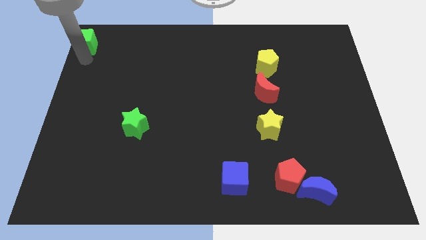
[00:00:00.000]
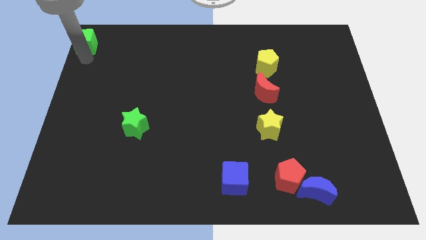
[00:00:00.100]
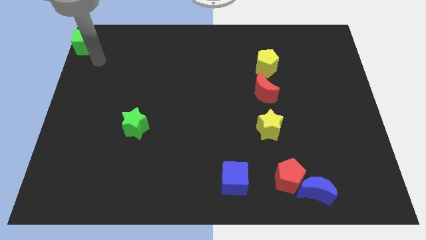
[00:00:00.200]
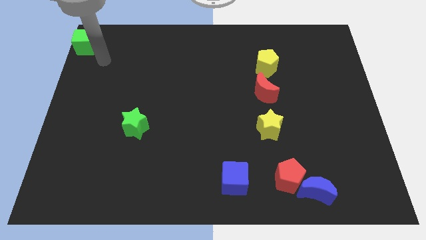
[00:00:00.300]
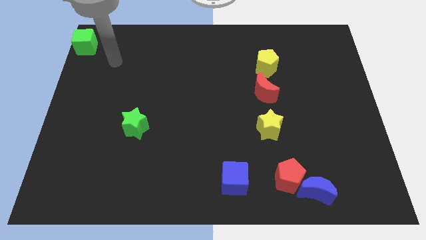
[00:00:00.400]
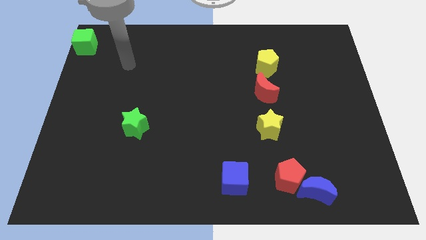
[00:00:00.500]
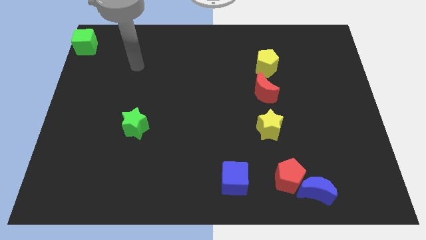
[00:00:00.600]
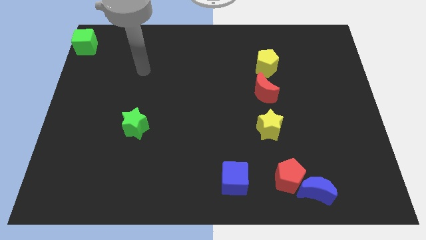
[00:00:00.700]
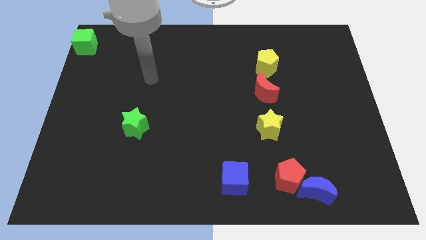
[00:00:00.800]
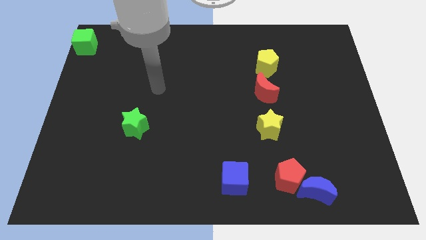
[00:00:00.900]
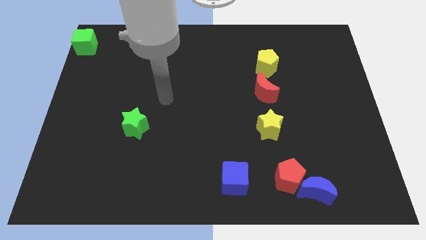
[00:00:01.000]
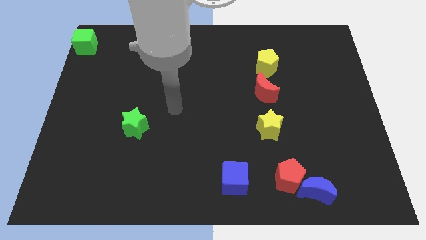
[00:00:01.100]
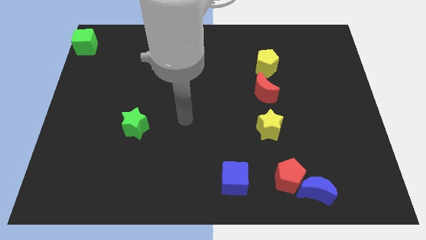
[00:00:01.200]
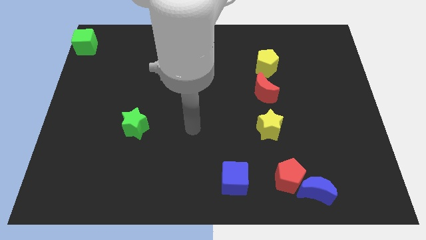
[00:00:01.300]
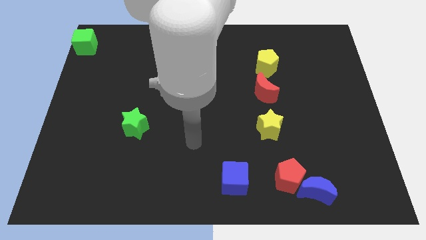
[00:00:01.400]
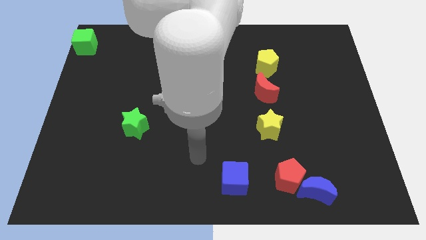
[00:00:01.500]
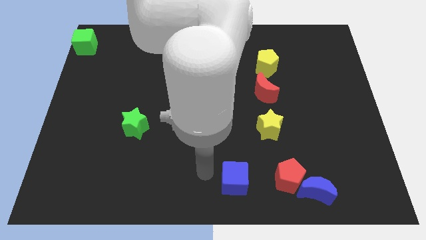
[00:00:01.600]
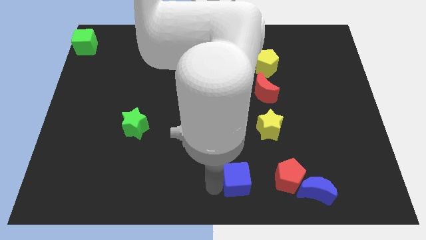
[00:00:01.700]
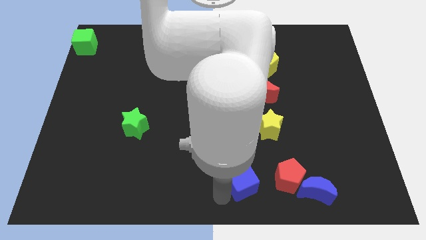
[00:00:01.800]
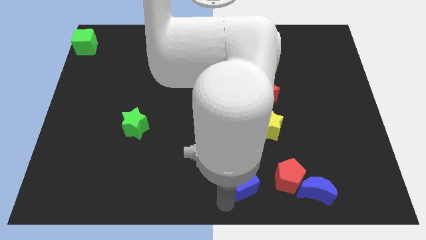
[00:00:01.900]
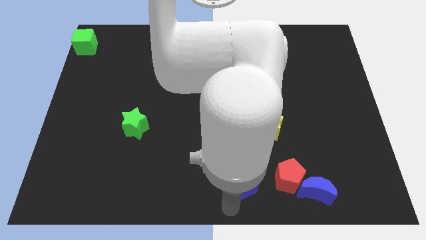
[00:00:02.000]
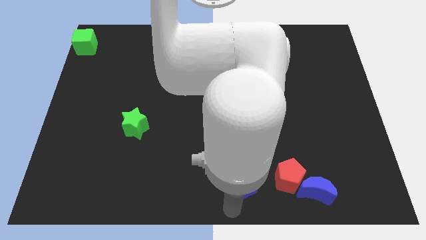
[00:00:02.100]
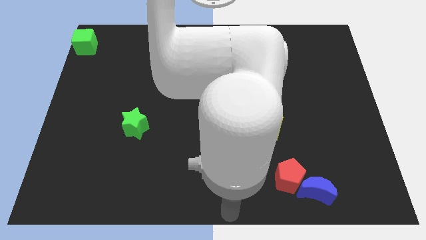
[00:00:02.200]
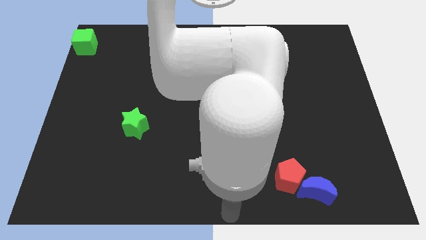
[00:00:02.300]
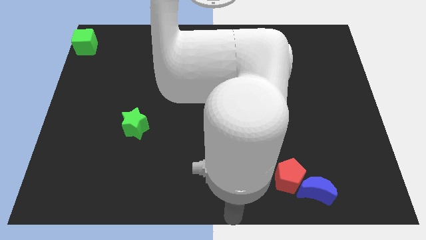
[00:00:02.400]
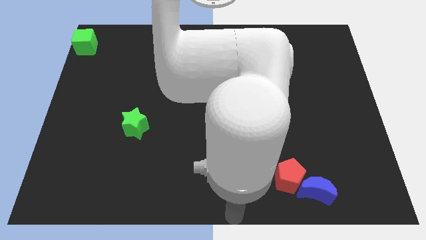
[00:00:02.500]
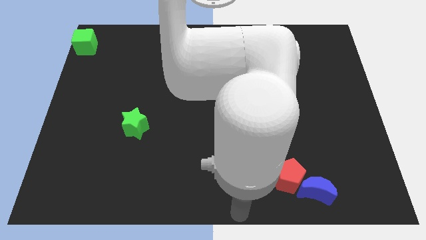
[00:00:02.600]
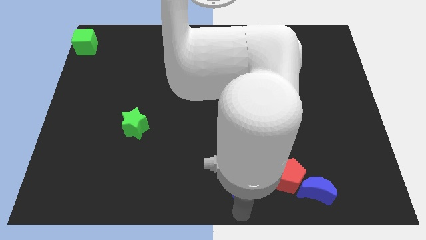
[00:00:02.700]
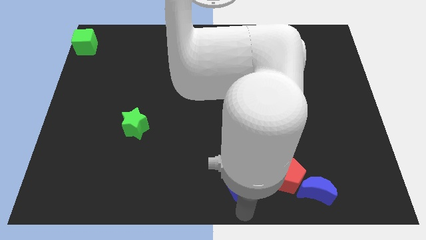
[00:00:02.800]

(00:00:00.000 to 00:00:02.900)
move your arm away from the green cube

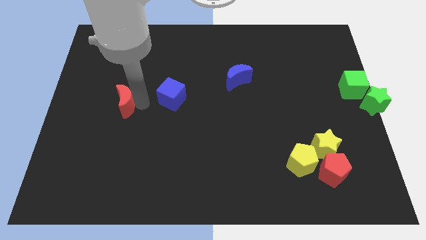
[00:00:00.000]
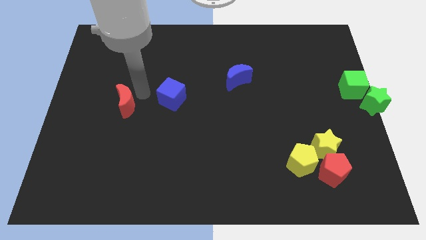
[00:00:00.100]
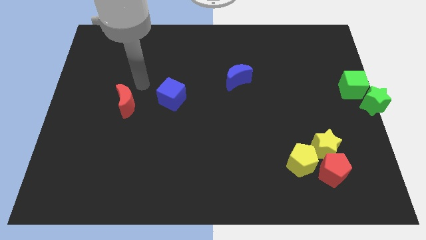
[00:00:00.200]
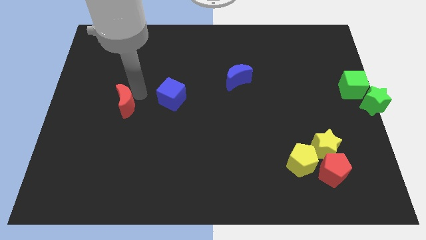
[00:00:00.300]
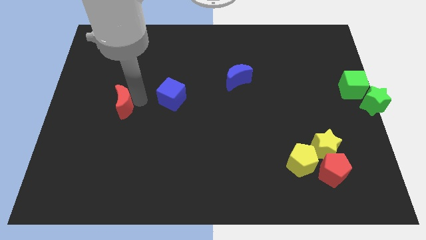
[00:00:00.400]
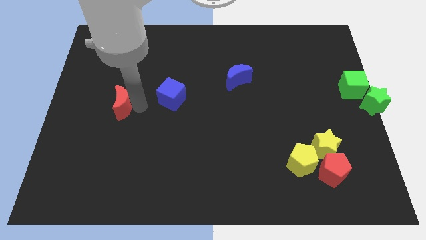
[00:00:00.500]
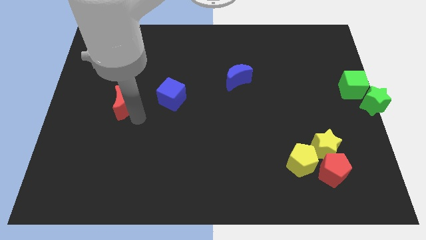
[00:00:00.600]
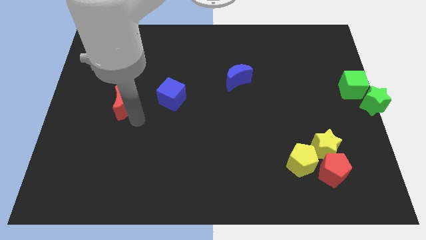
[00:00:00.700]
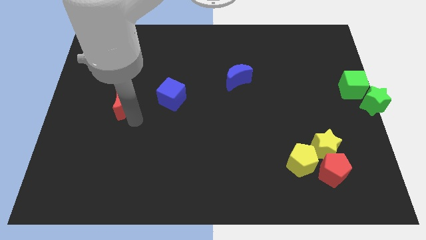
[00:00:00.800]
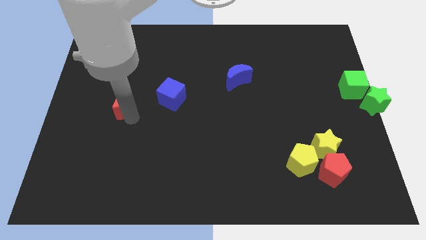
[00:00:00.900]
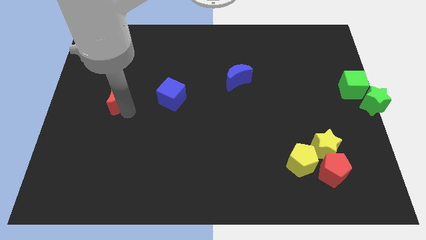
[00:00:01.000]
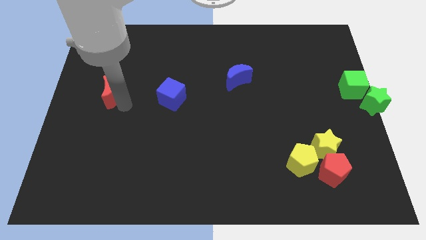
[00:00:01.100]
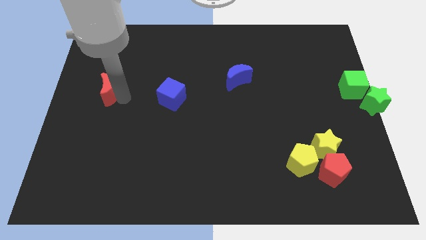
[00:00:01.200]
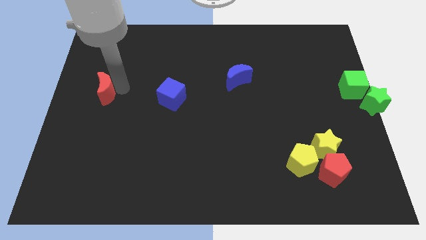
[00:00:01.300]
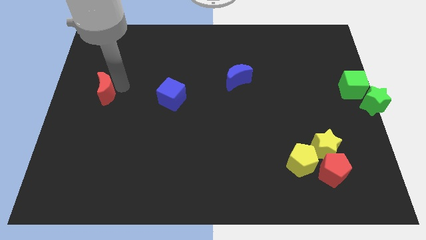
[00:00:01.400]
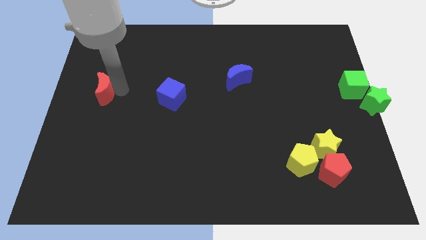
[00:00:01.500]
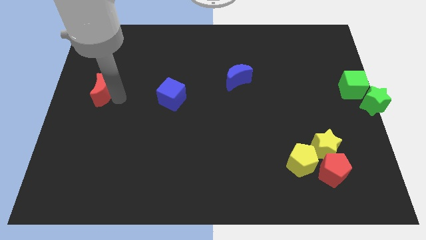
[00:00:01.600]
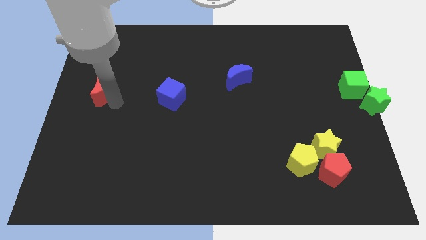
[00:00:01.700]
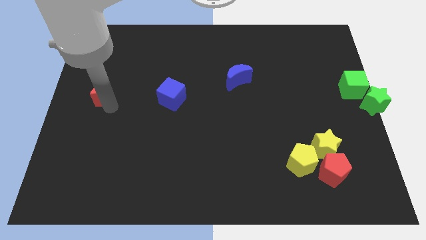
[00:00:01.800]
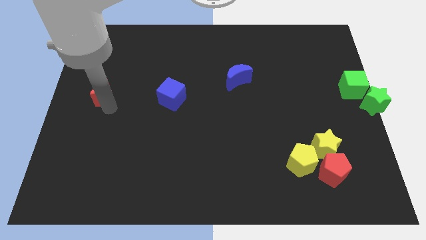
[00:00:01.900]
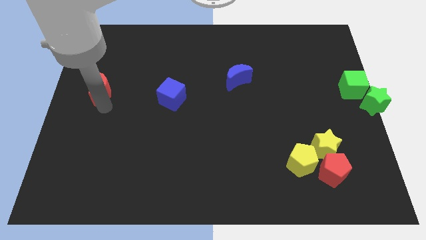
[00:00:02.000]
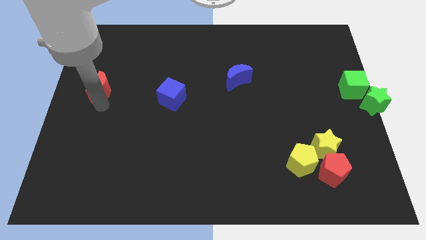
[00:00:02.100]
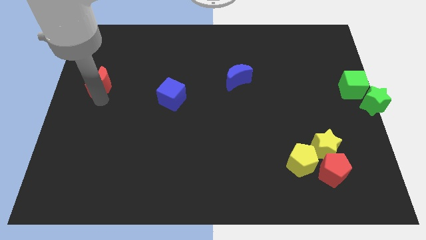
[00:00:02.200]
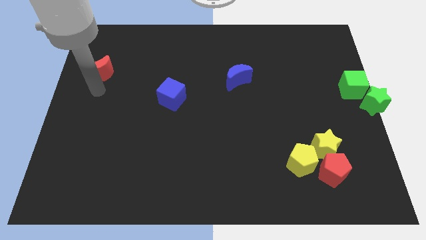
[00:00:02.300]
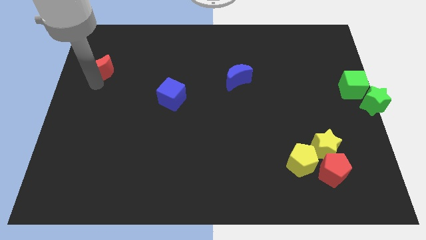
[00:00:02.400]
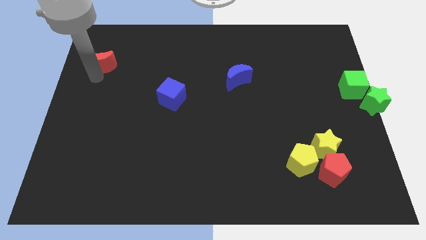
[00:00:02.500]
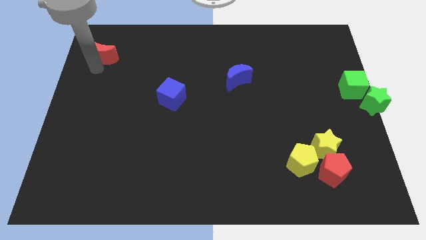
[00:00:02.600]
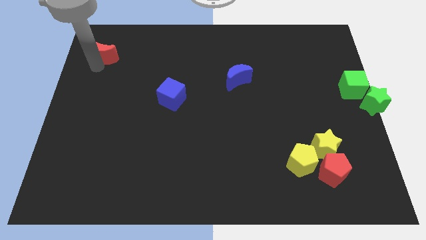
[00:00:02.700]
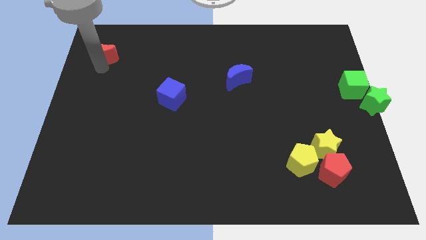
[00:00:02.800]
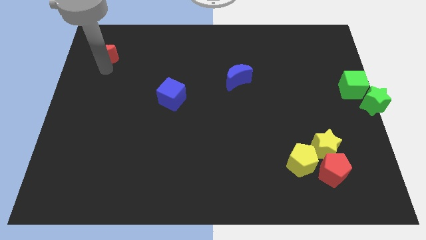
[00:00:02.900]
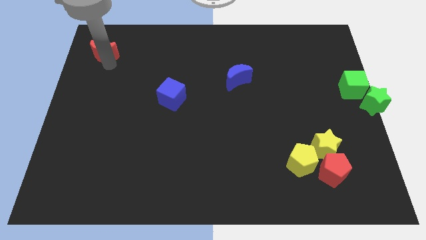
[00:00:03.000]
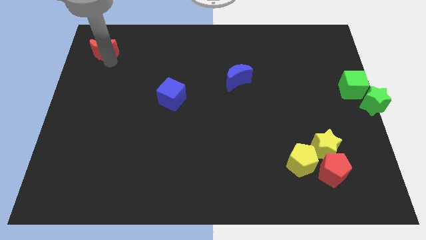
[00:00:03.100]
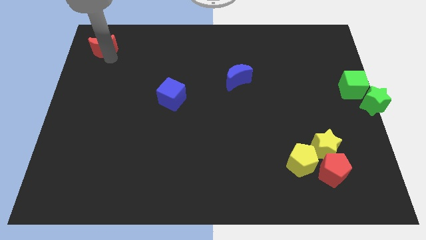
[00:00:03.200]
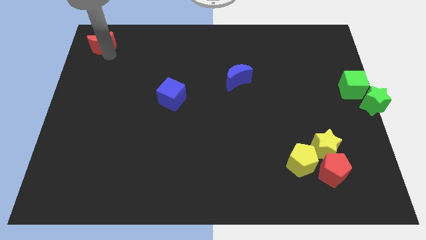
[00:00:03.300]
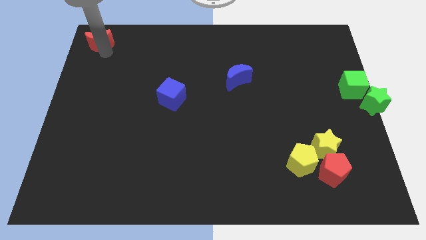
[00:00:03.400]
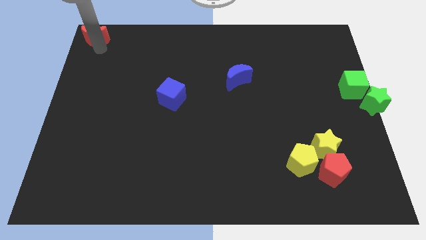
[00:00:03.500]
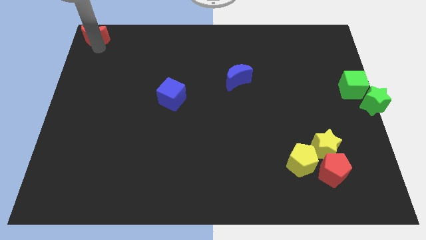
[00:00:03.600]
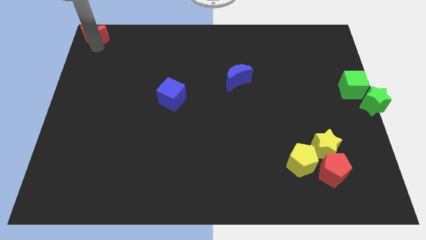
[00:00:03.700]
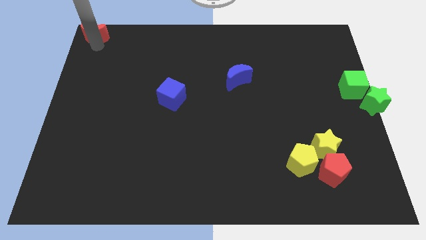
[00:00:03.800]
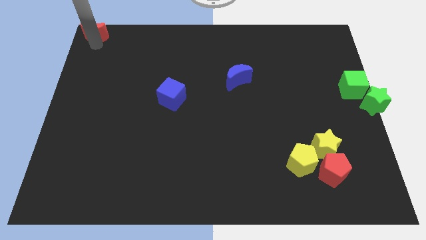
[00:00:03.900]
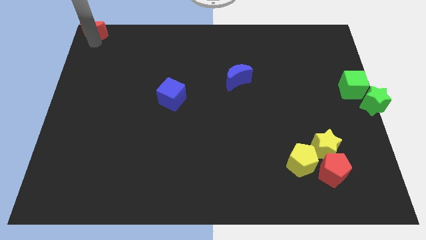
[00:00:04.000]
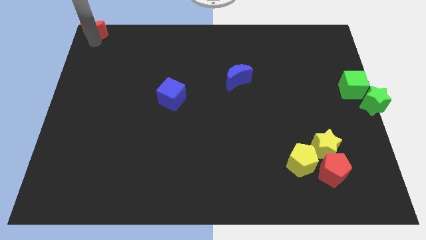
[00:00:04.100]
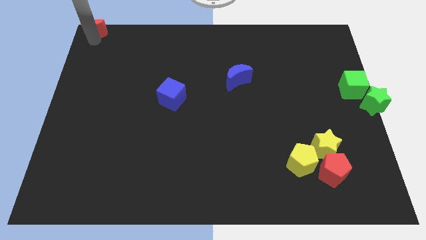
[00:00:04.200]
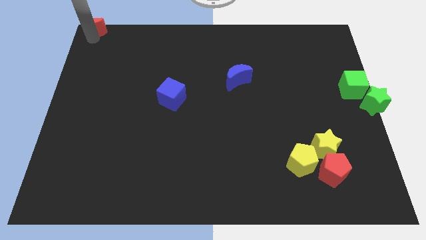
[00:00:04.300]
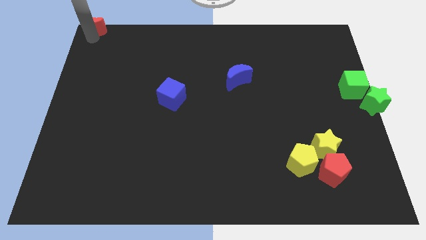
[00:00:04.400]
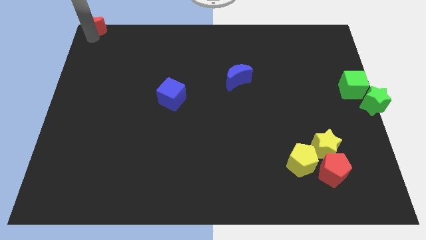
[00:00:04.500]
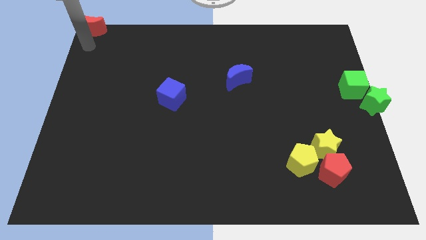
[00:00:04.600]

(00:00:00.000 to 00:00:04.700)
put red crescent to top left corner

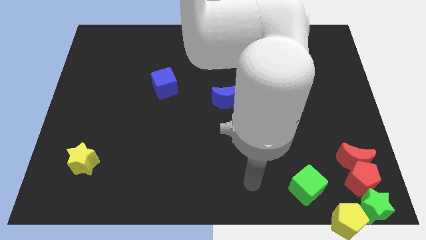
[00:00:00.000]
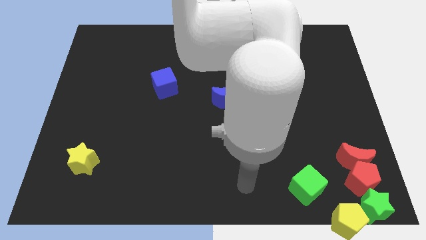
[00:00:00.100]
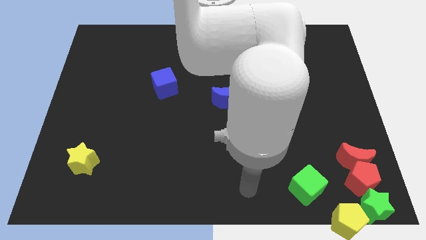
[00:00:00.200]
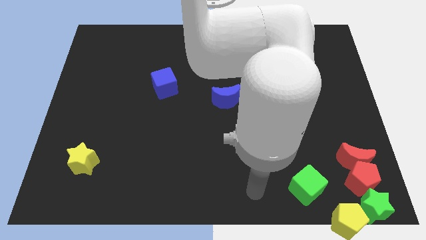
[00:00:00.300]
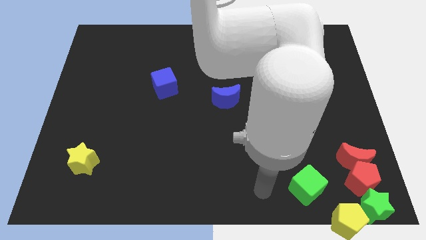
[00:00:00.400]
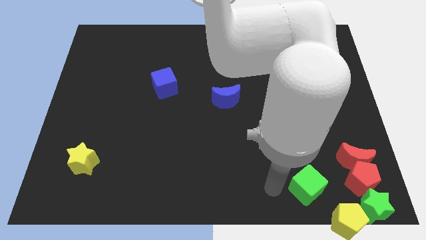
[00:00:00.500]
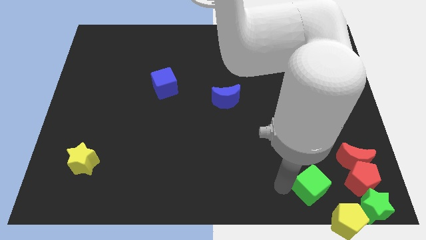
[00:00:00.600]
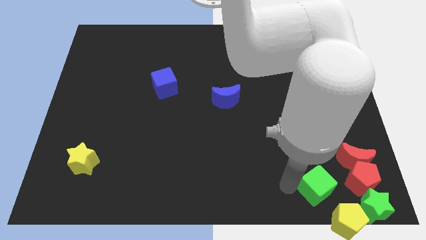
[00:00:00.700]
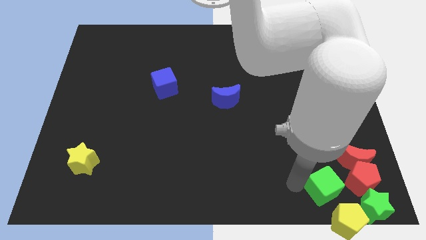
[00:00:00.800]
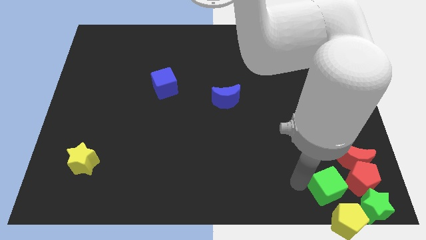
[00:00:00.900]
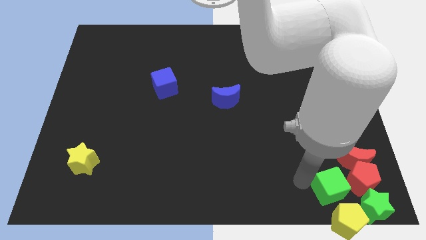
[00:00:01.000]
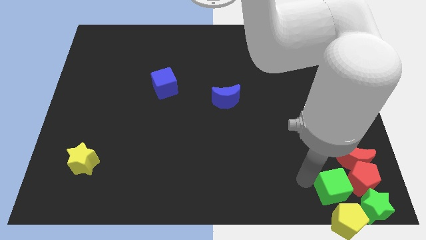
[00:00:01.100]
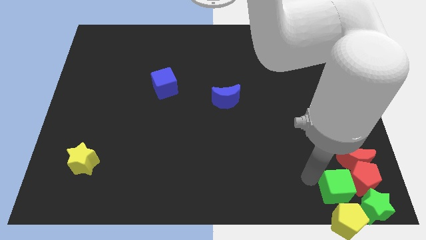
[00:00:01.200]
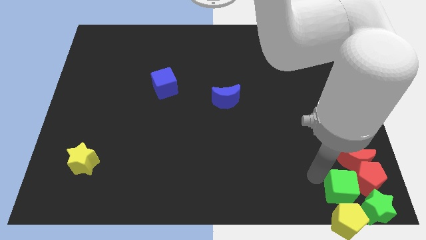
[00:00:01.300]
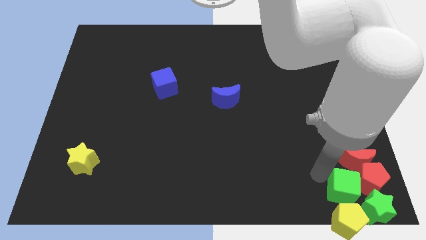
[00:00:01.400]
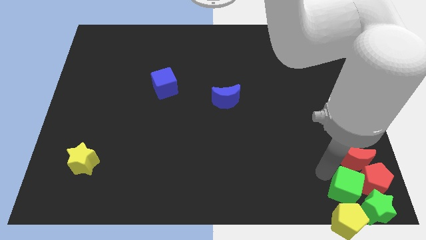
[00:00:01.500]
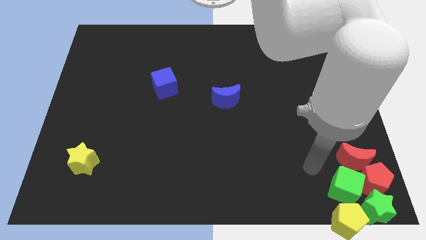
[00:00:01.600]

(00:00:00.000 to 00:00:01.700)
add the green cube into the group of blocks
